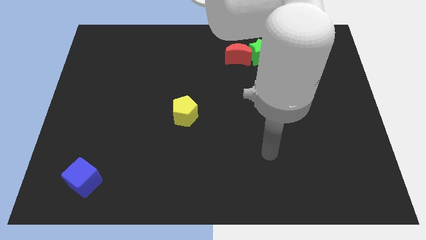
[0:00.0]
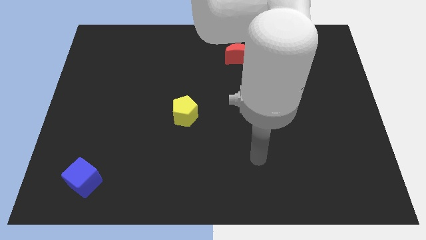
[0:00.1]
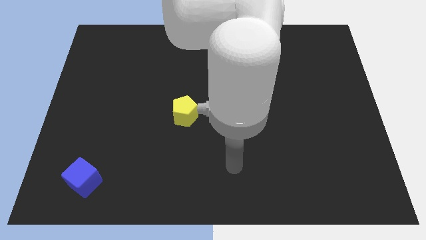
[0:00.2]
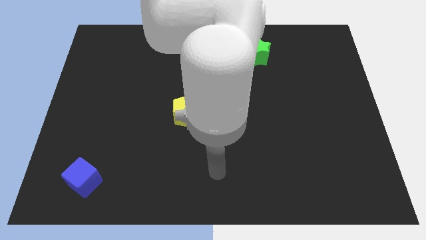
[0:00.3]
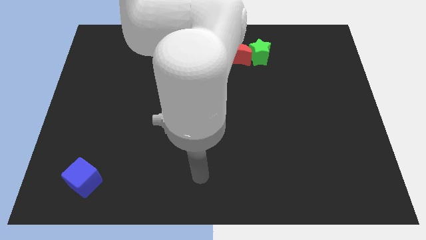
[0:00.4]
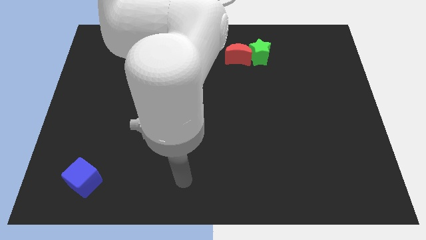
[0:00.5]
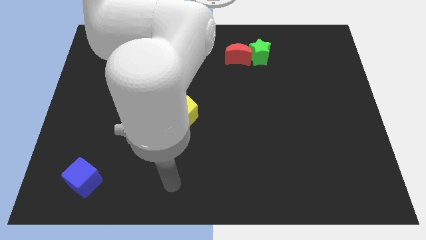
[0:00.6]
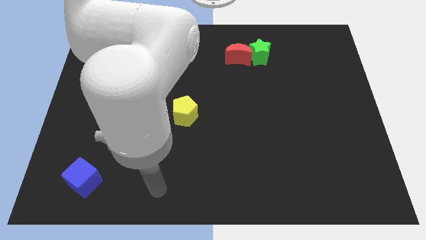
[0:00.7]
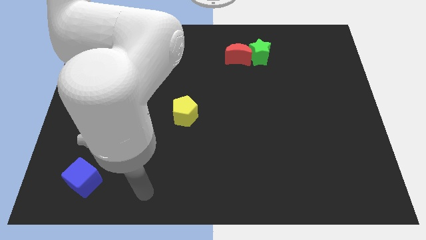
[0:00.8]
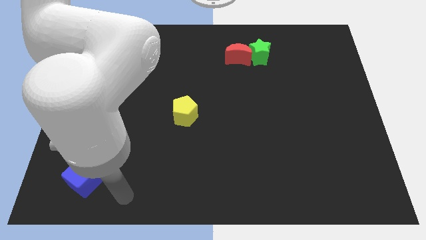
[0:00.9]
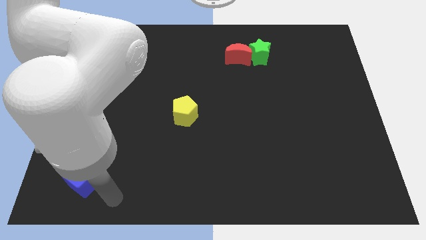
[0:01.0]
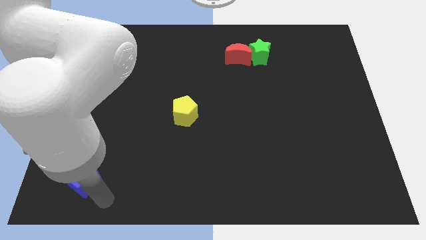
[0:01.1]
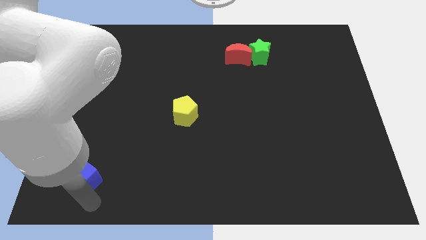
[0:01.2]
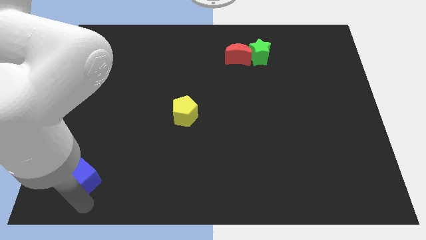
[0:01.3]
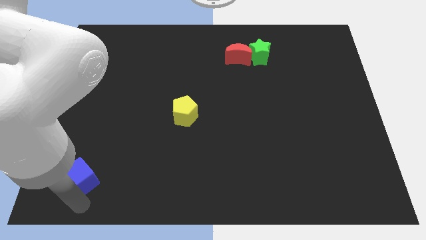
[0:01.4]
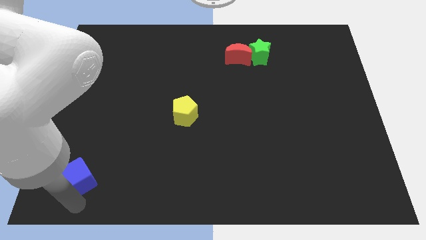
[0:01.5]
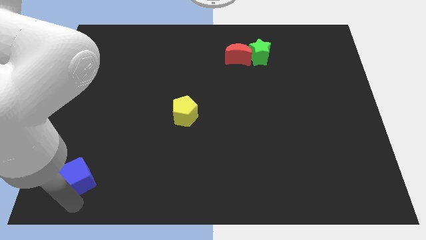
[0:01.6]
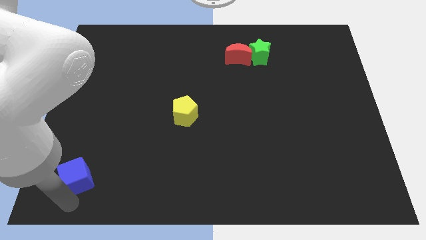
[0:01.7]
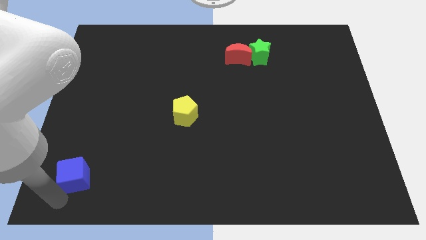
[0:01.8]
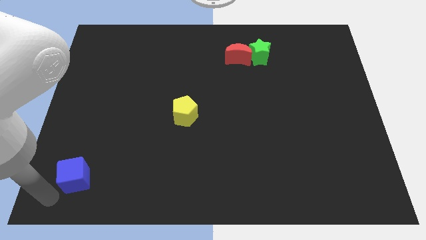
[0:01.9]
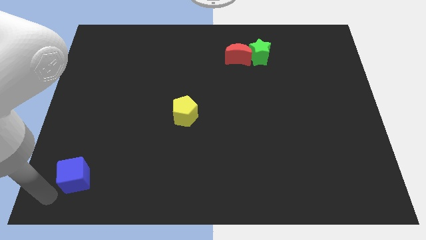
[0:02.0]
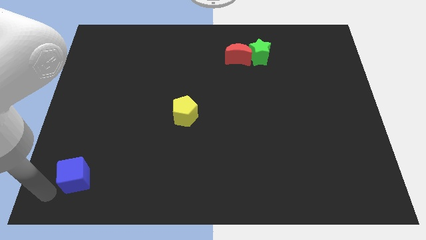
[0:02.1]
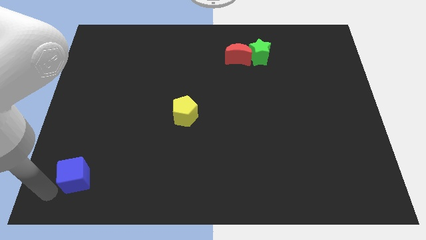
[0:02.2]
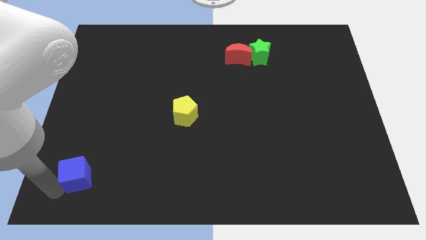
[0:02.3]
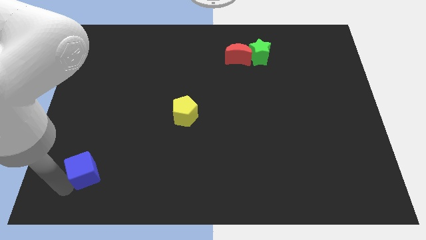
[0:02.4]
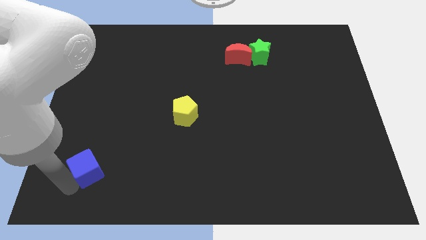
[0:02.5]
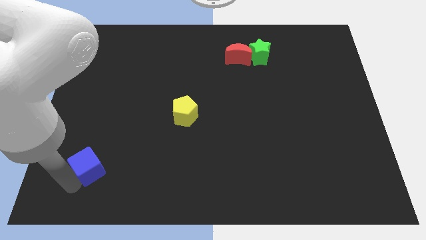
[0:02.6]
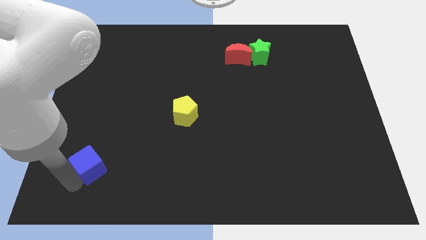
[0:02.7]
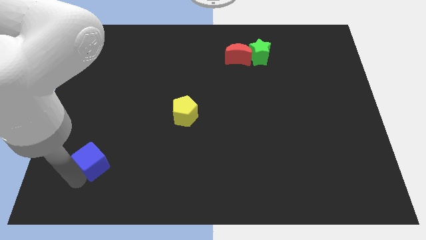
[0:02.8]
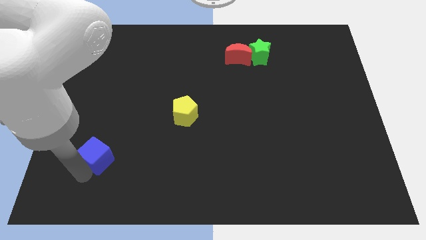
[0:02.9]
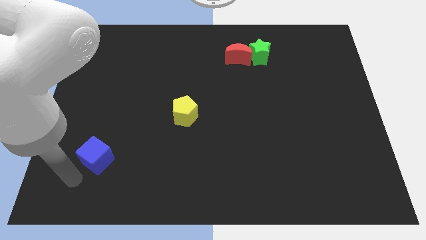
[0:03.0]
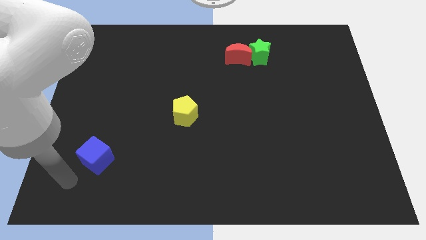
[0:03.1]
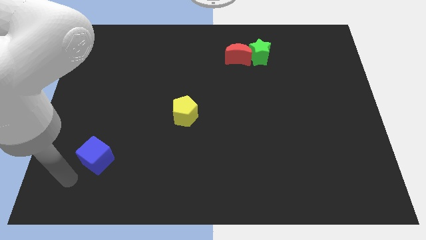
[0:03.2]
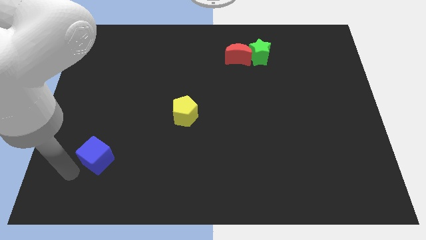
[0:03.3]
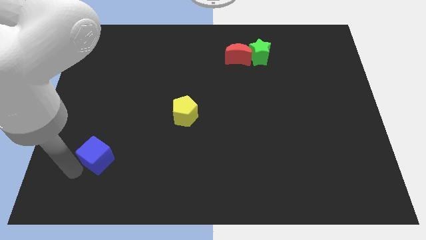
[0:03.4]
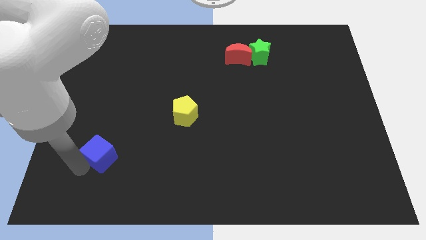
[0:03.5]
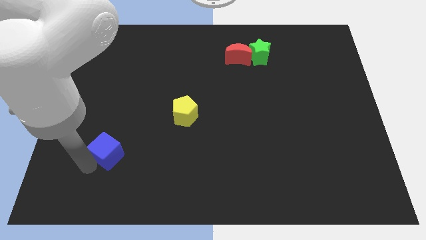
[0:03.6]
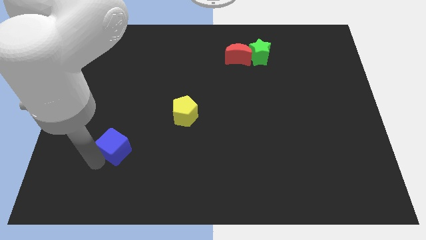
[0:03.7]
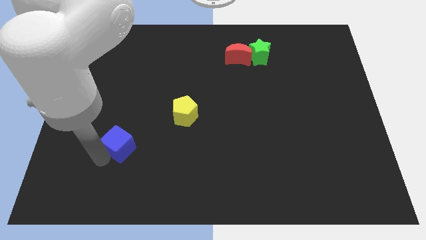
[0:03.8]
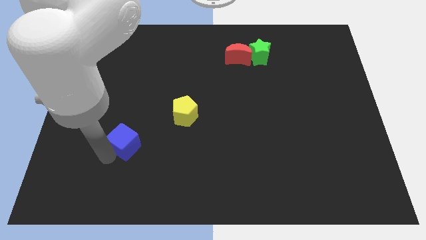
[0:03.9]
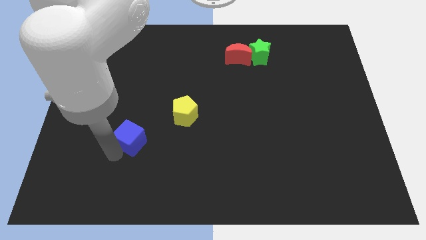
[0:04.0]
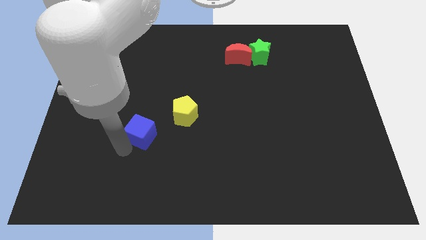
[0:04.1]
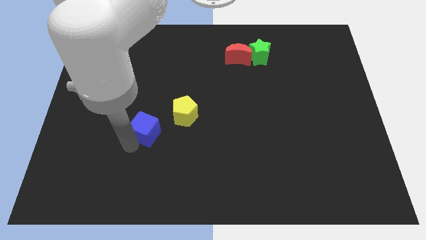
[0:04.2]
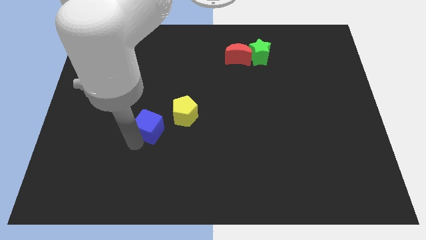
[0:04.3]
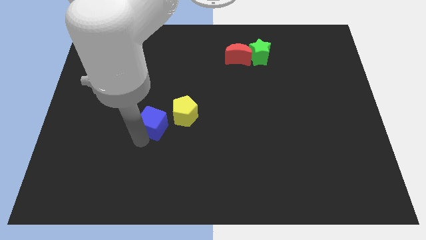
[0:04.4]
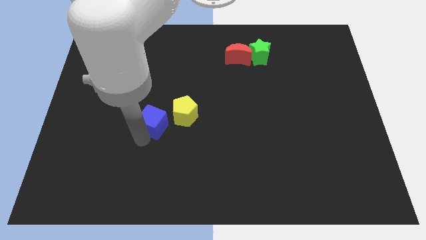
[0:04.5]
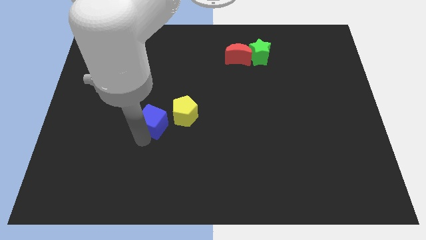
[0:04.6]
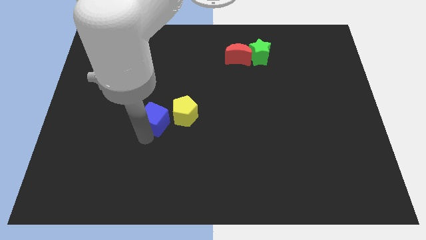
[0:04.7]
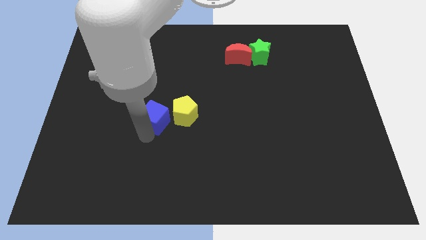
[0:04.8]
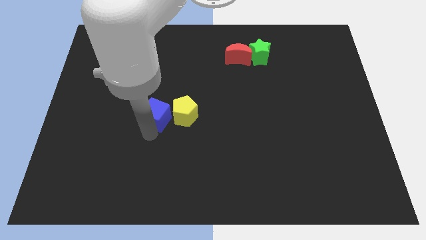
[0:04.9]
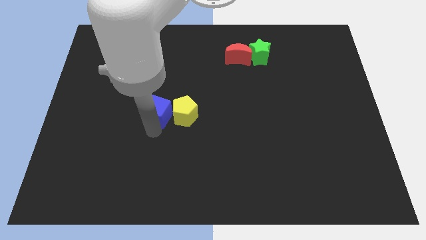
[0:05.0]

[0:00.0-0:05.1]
move the blue cube to the yellow block

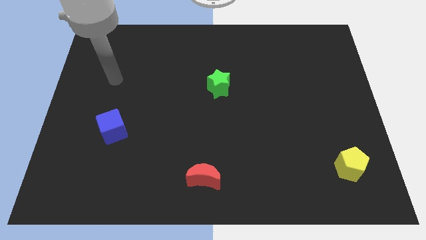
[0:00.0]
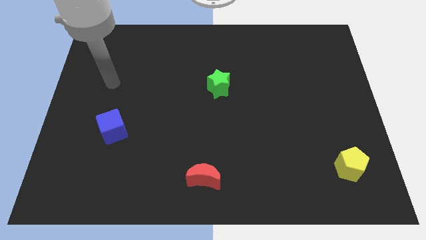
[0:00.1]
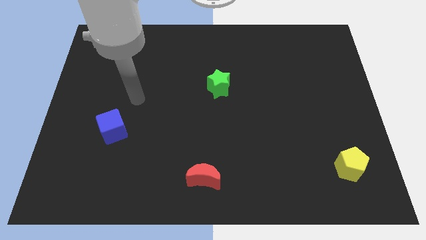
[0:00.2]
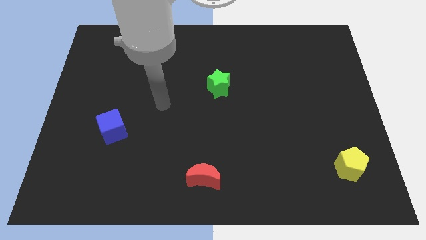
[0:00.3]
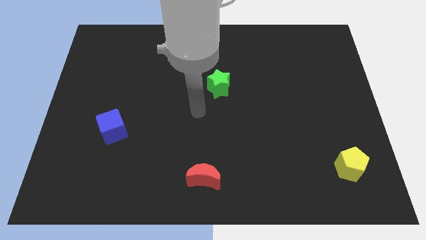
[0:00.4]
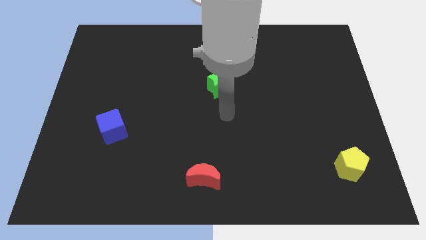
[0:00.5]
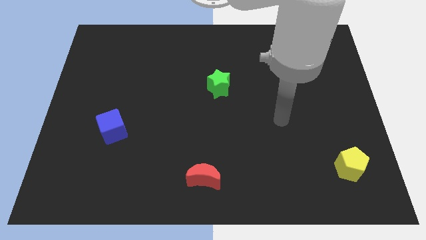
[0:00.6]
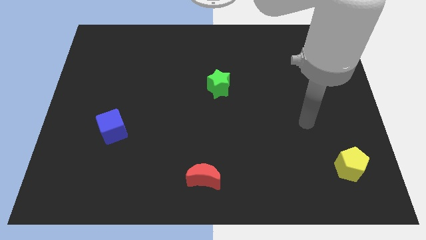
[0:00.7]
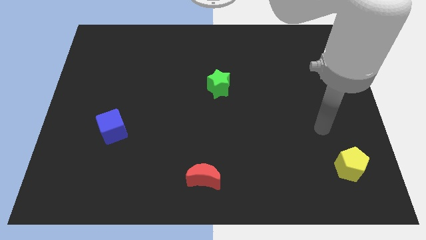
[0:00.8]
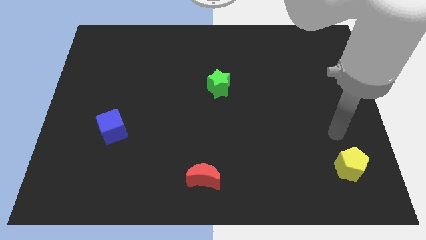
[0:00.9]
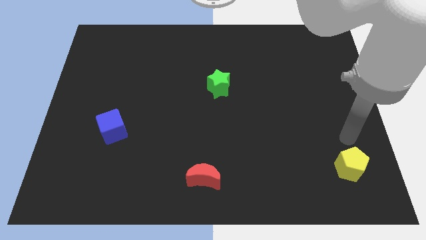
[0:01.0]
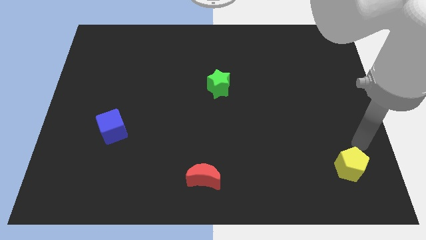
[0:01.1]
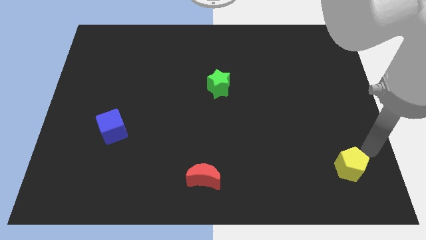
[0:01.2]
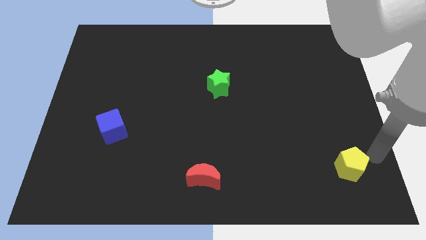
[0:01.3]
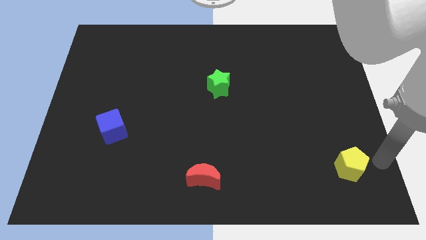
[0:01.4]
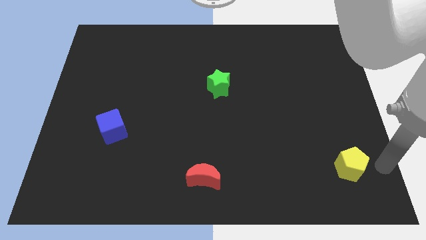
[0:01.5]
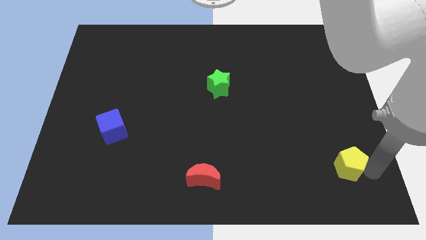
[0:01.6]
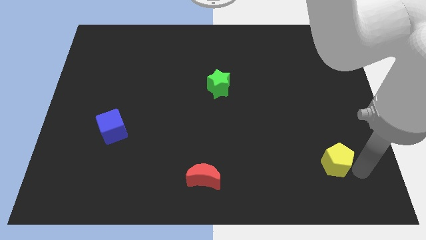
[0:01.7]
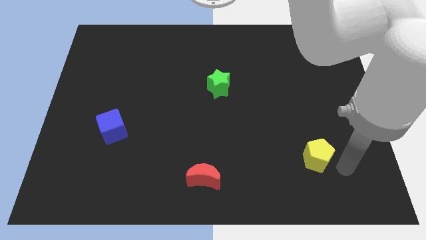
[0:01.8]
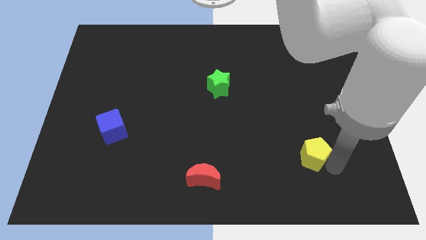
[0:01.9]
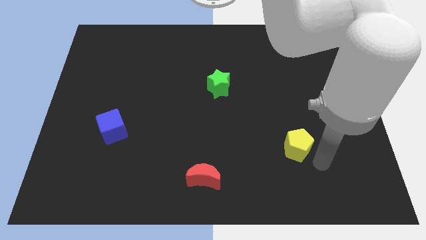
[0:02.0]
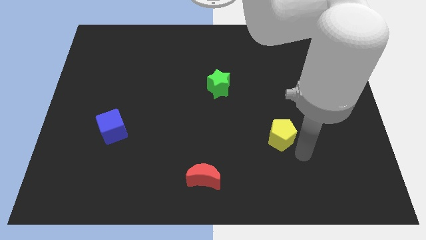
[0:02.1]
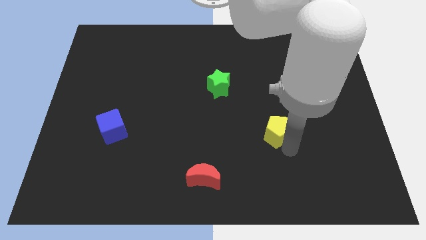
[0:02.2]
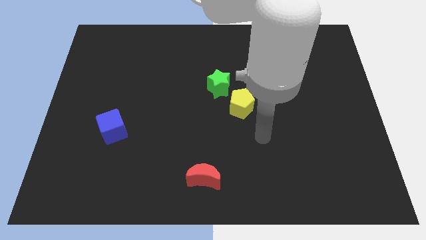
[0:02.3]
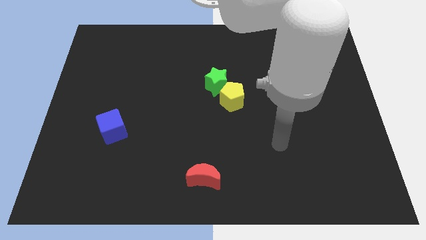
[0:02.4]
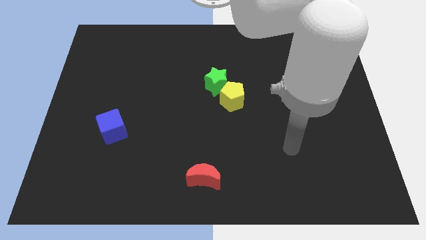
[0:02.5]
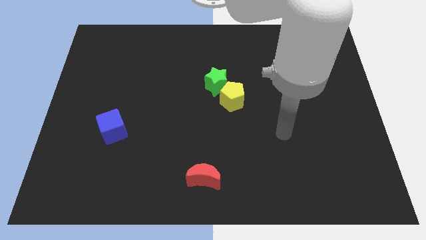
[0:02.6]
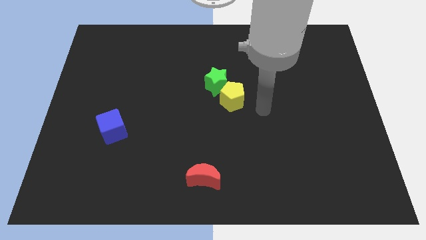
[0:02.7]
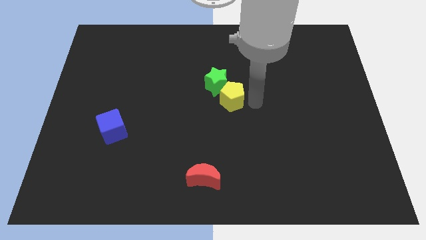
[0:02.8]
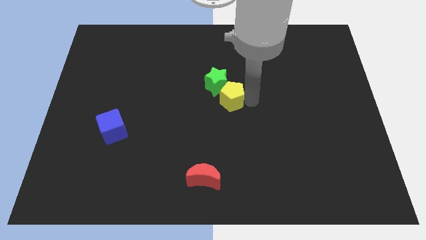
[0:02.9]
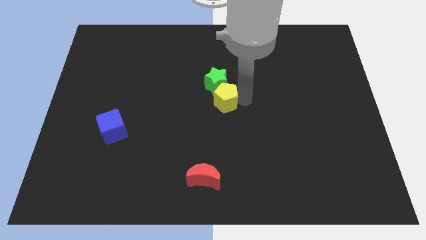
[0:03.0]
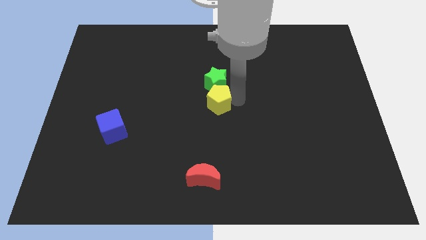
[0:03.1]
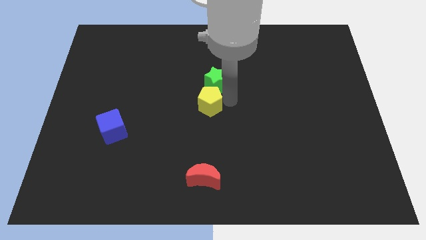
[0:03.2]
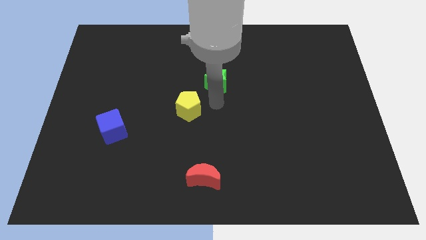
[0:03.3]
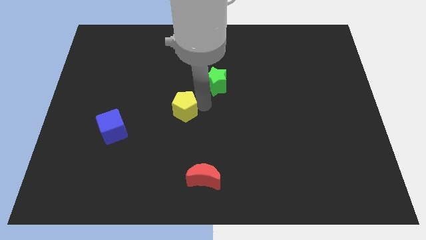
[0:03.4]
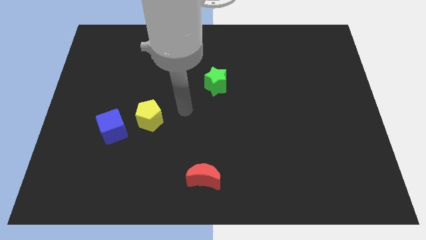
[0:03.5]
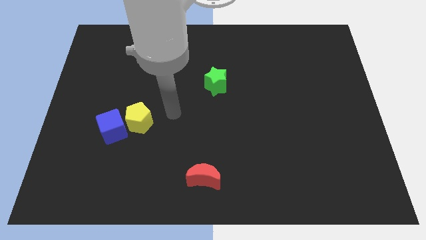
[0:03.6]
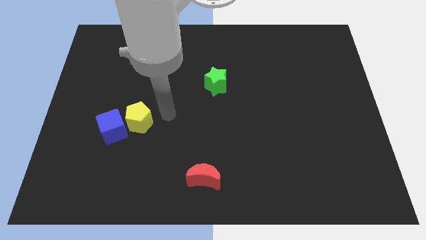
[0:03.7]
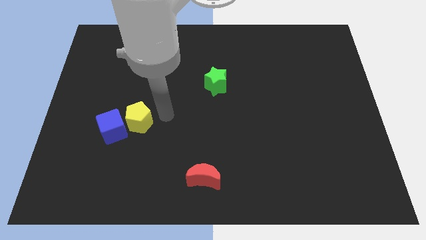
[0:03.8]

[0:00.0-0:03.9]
put the pentagon close to the blue cube
